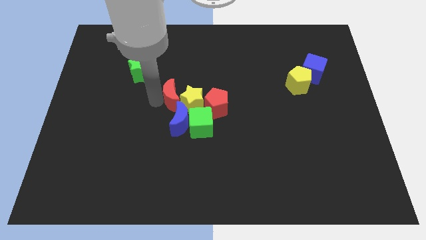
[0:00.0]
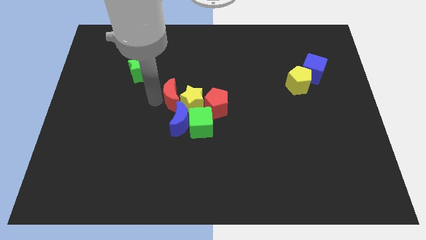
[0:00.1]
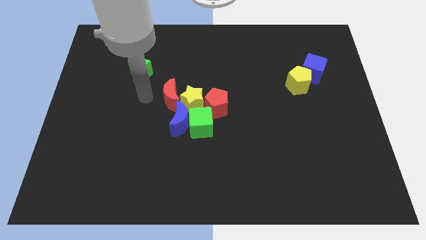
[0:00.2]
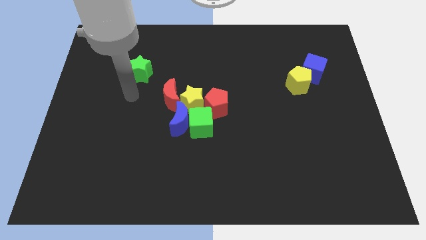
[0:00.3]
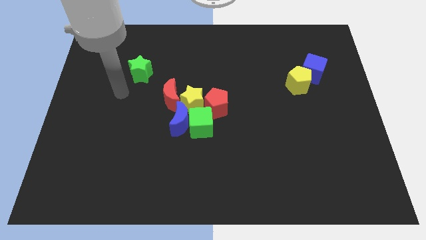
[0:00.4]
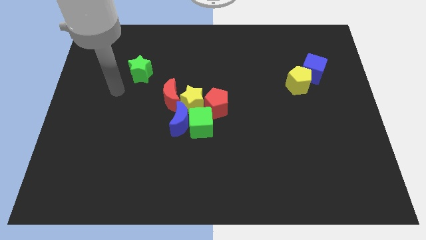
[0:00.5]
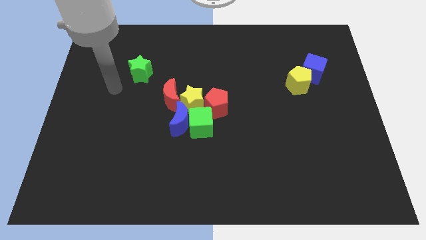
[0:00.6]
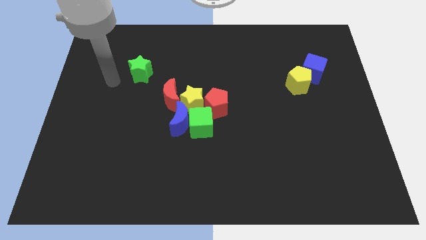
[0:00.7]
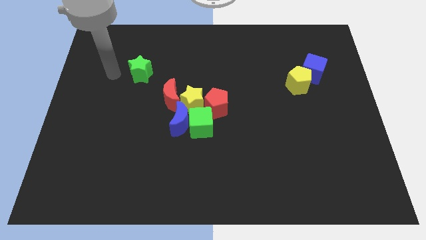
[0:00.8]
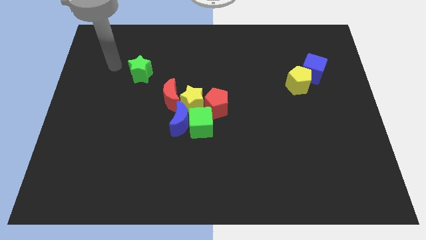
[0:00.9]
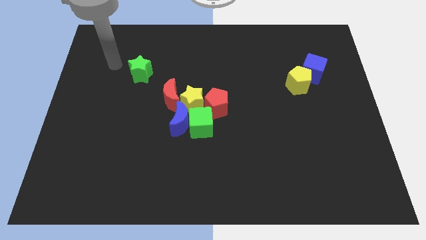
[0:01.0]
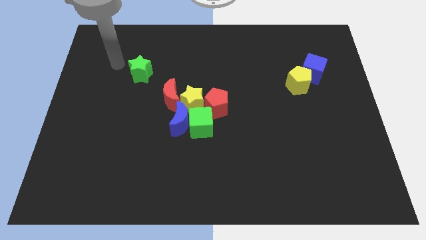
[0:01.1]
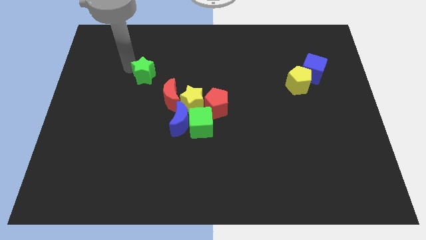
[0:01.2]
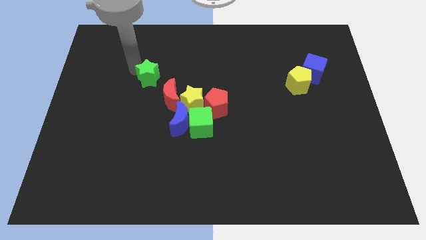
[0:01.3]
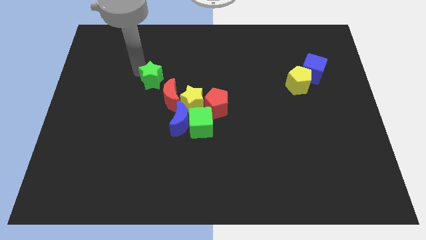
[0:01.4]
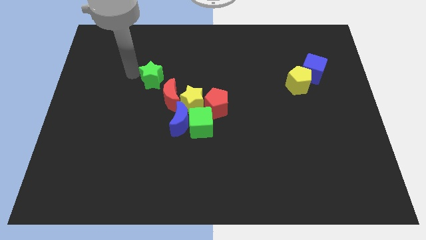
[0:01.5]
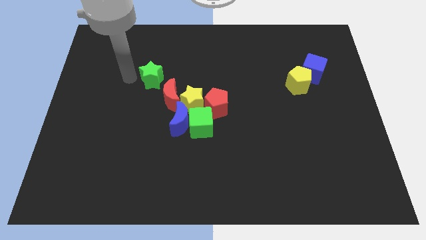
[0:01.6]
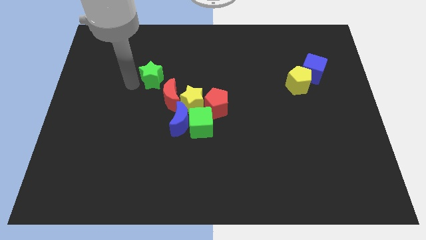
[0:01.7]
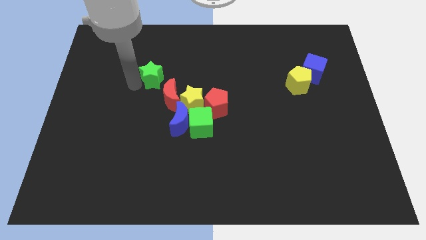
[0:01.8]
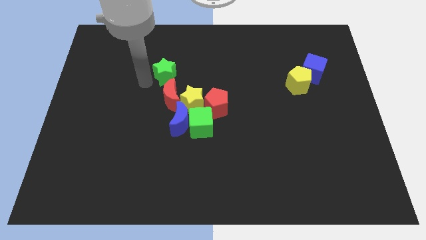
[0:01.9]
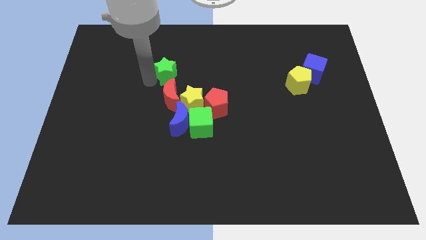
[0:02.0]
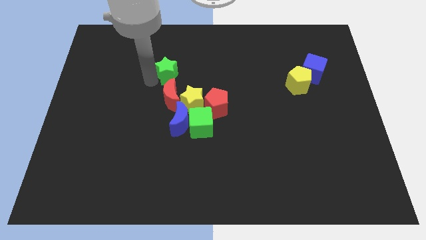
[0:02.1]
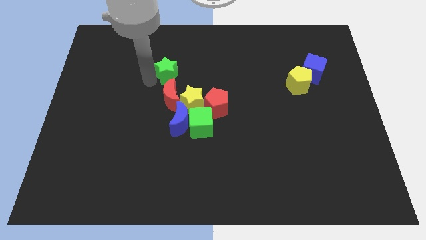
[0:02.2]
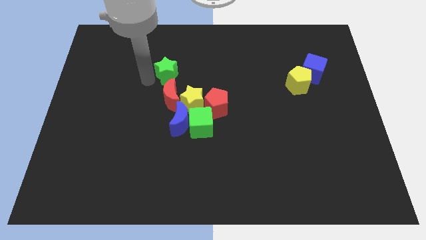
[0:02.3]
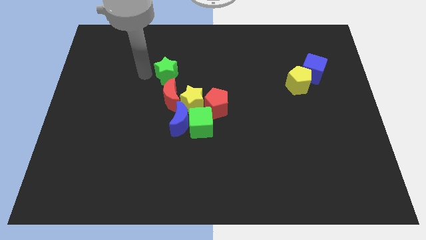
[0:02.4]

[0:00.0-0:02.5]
place the green star at the top of red moon

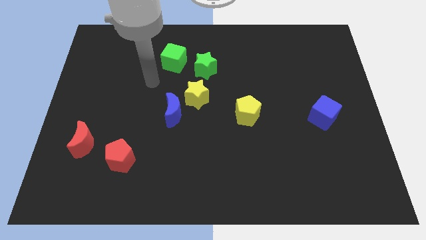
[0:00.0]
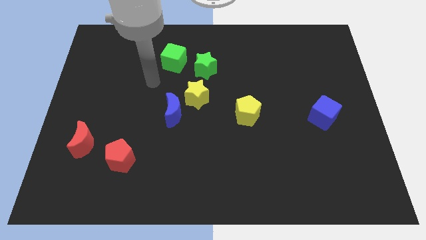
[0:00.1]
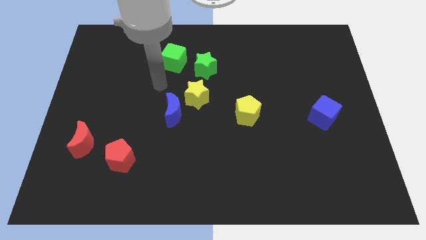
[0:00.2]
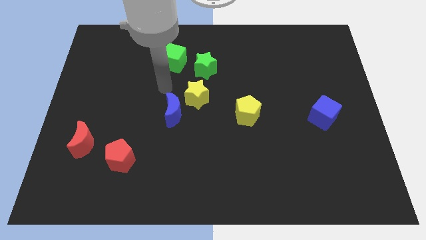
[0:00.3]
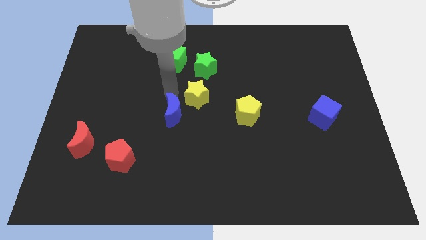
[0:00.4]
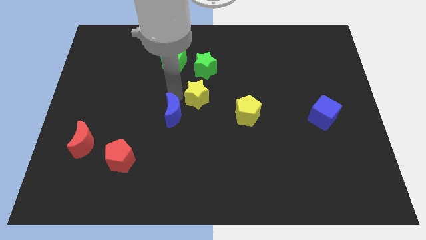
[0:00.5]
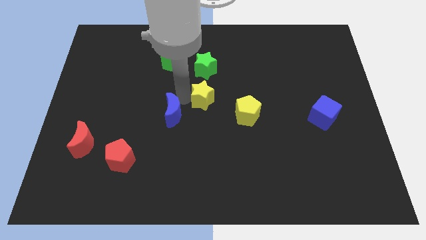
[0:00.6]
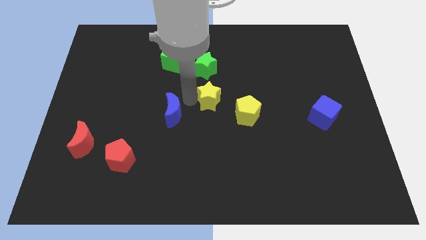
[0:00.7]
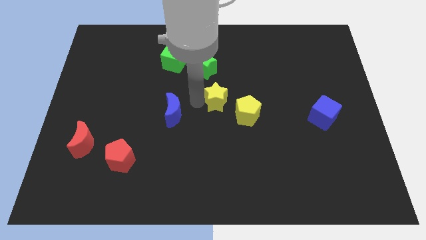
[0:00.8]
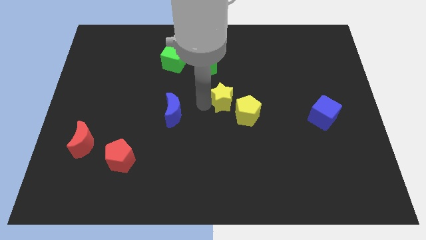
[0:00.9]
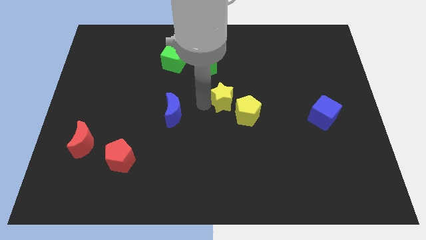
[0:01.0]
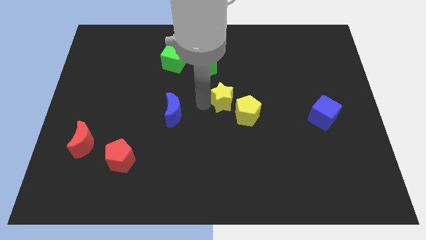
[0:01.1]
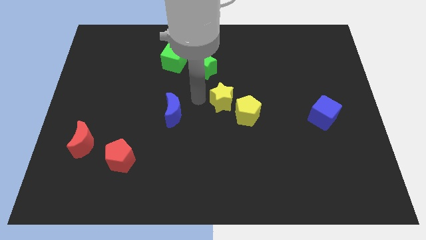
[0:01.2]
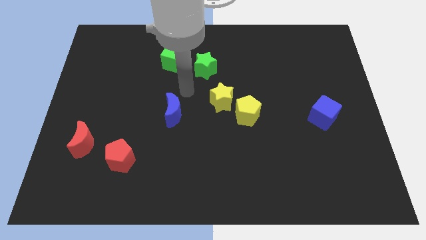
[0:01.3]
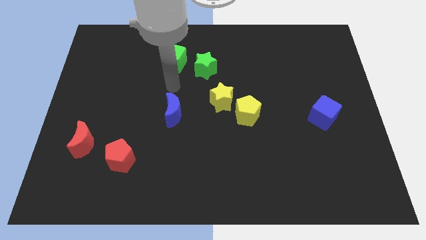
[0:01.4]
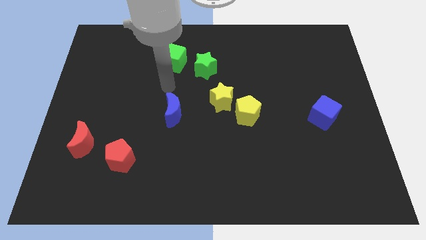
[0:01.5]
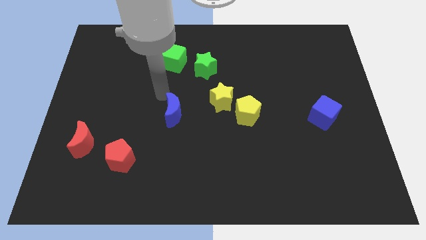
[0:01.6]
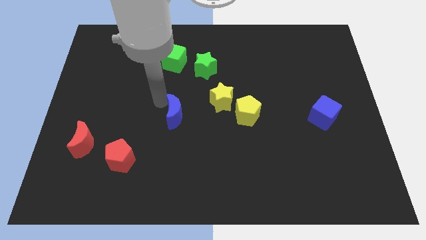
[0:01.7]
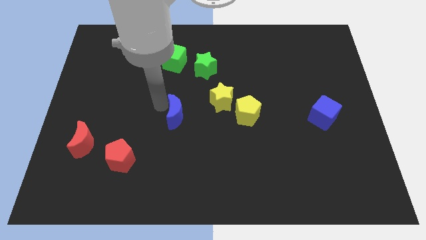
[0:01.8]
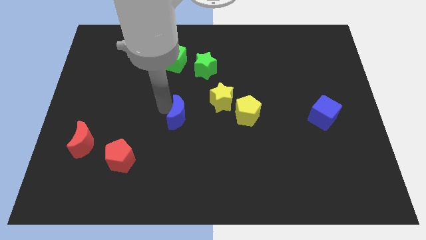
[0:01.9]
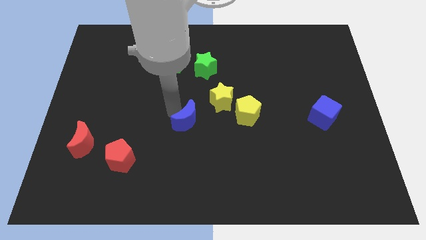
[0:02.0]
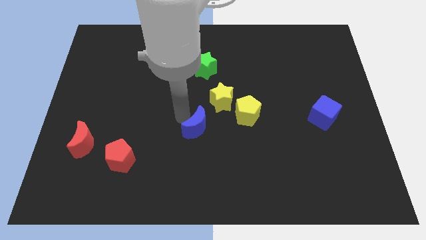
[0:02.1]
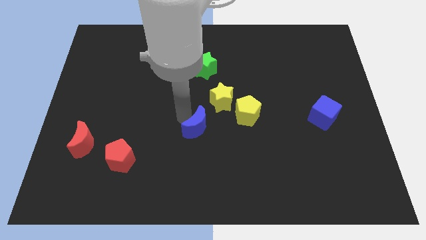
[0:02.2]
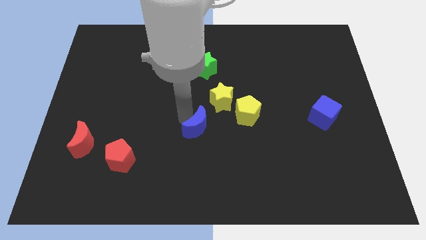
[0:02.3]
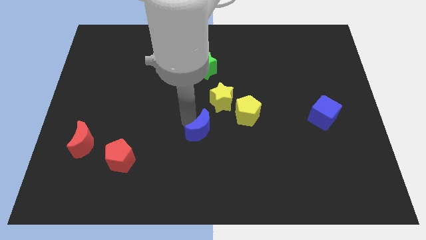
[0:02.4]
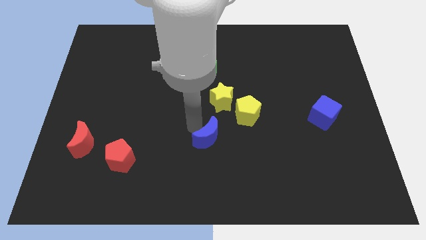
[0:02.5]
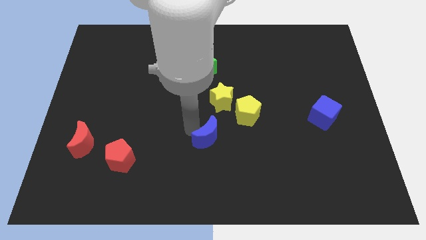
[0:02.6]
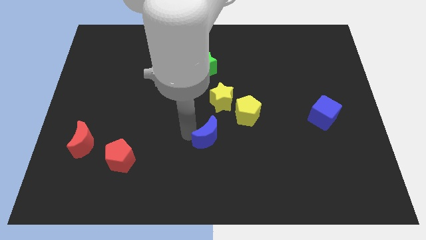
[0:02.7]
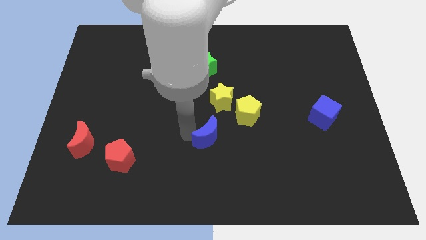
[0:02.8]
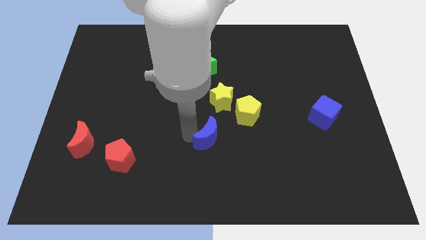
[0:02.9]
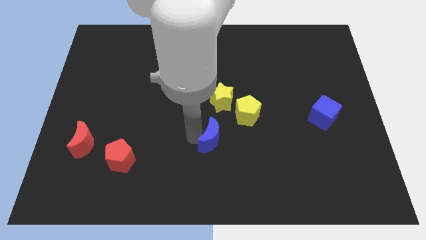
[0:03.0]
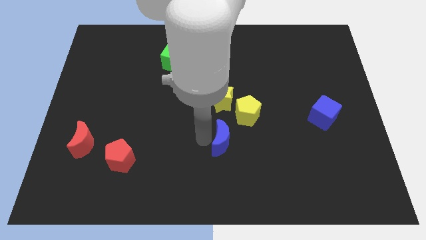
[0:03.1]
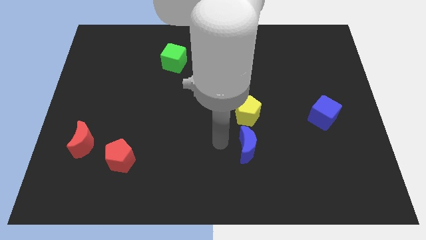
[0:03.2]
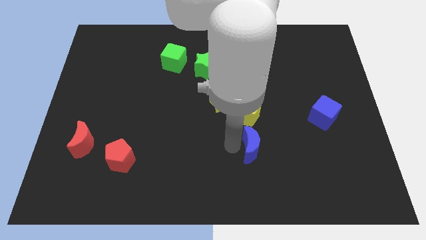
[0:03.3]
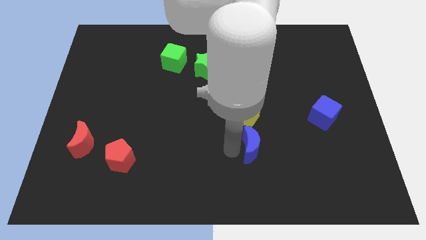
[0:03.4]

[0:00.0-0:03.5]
move the blue crescent to the bottom of yellow pentagon

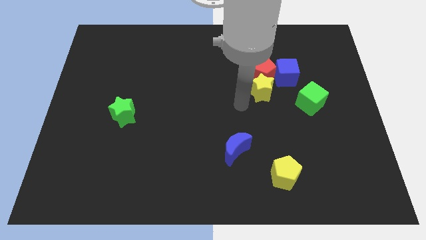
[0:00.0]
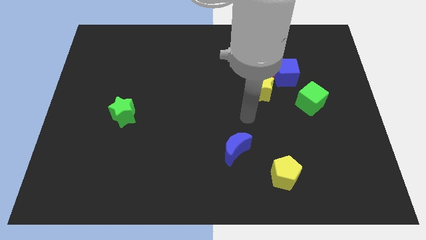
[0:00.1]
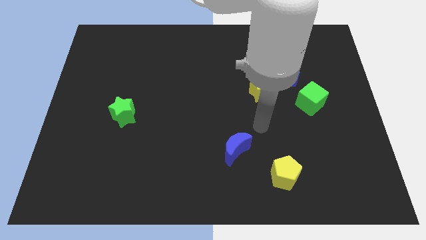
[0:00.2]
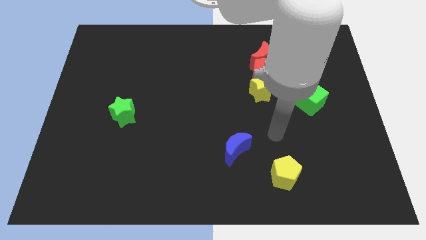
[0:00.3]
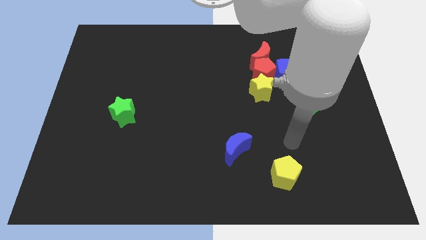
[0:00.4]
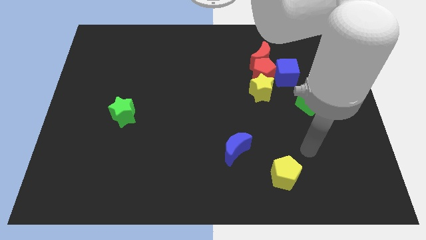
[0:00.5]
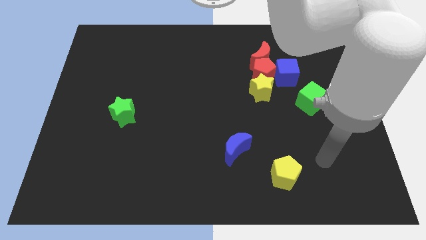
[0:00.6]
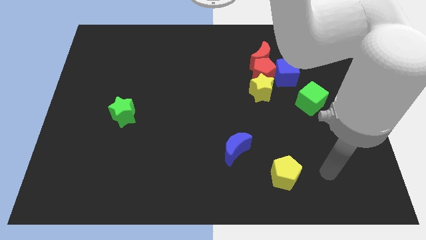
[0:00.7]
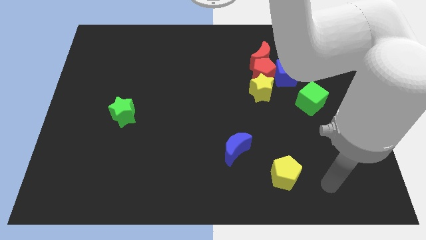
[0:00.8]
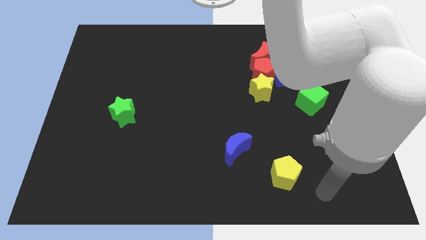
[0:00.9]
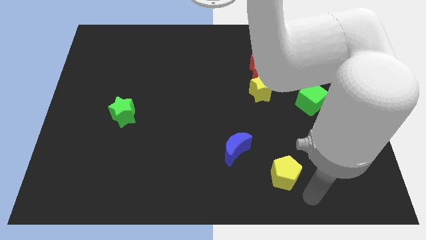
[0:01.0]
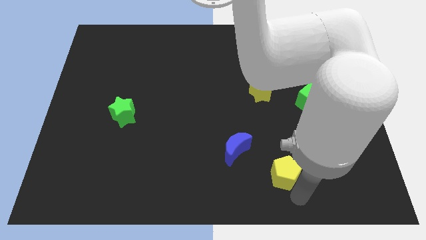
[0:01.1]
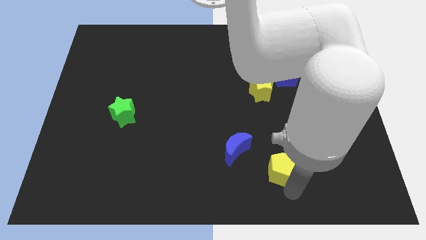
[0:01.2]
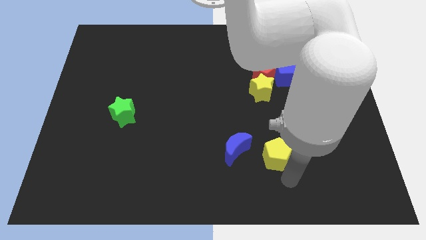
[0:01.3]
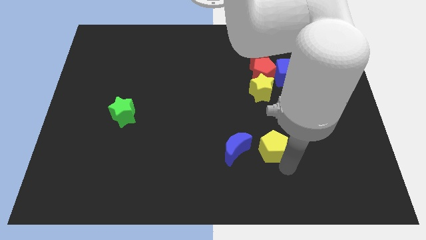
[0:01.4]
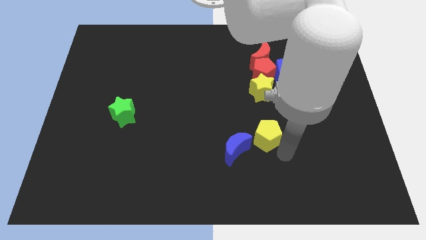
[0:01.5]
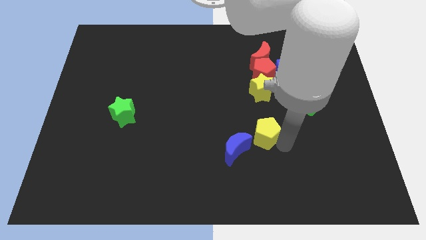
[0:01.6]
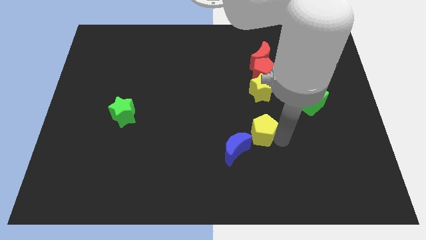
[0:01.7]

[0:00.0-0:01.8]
slide the yellow pentagon diagonally to the top right of the blue moon

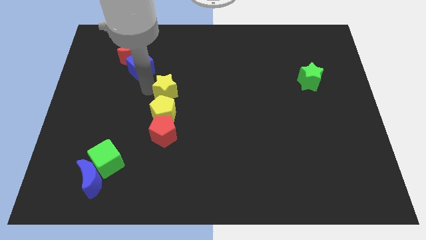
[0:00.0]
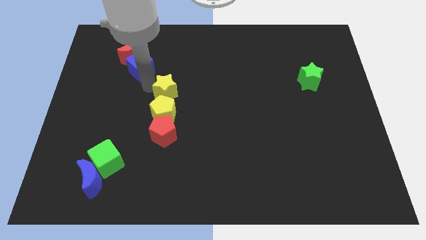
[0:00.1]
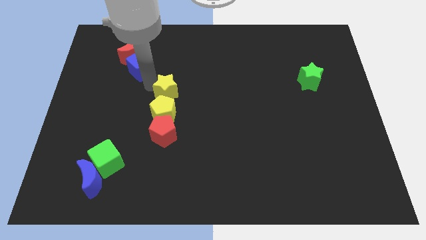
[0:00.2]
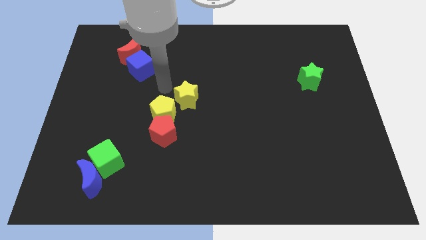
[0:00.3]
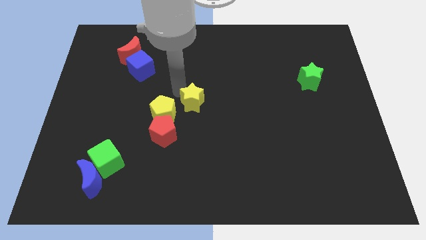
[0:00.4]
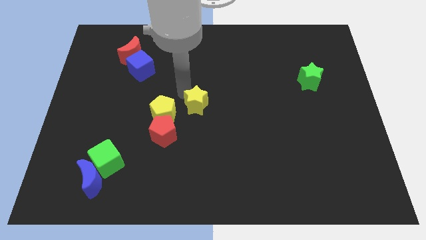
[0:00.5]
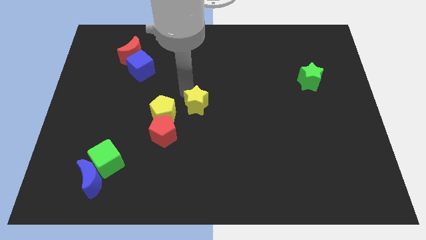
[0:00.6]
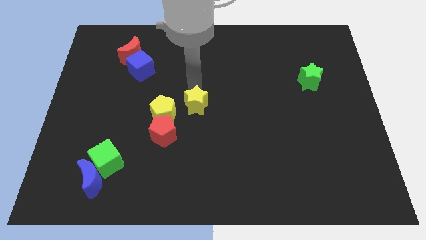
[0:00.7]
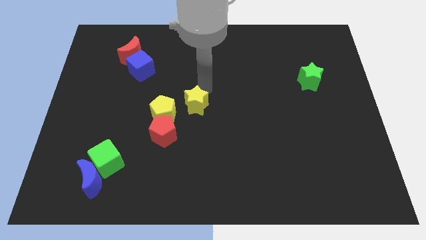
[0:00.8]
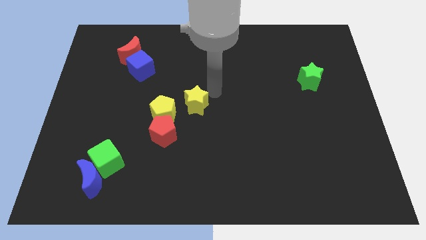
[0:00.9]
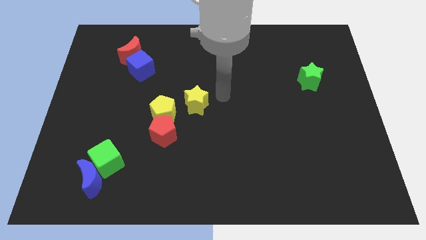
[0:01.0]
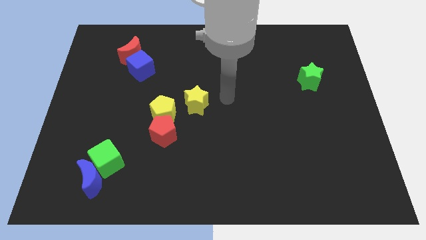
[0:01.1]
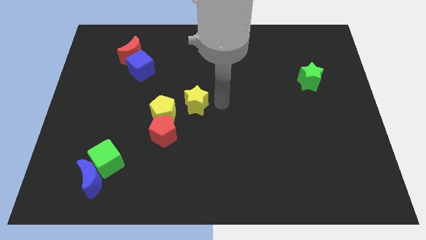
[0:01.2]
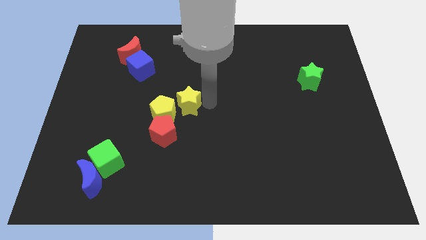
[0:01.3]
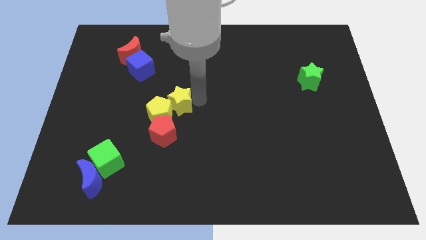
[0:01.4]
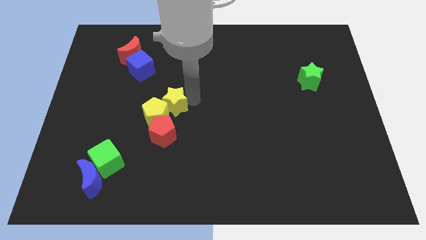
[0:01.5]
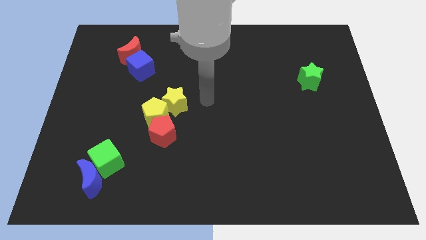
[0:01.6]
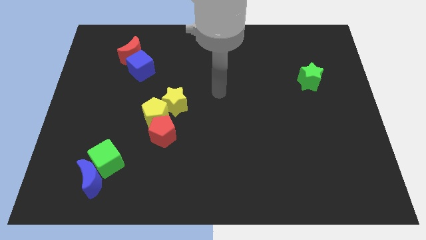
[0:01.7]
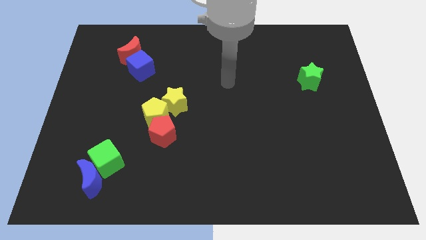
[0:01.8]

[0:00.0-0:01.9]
push the yellow star towards the center of the board
